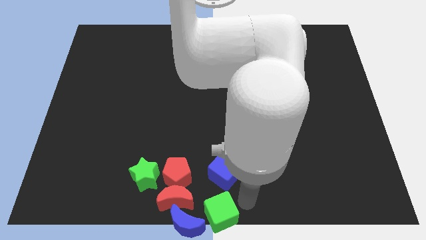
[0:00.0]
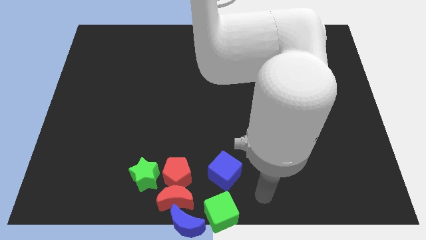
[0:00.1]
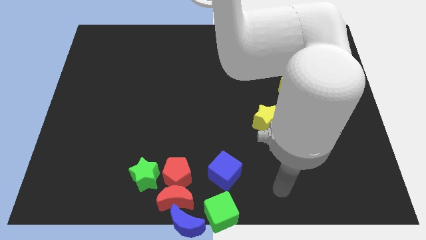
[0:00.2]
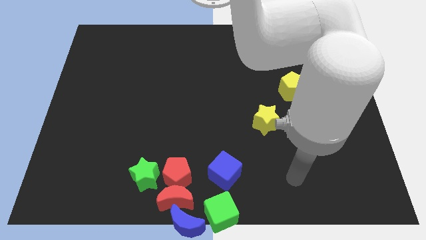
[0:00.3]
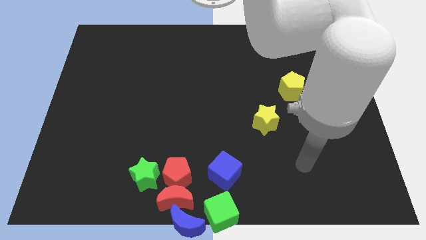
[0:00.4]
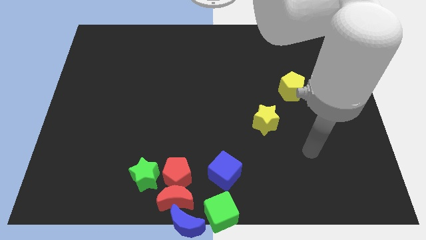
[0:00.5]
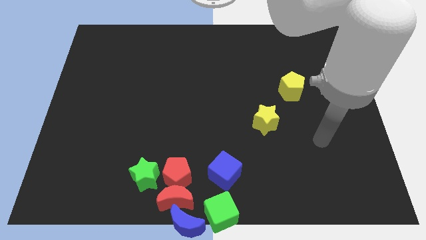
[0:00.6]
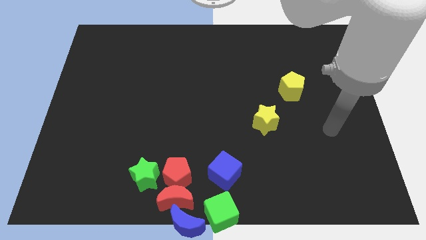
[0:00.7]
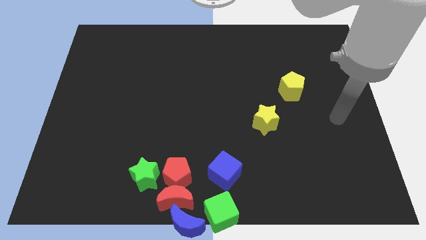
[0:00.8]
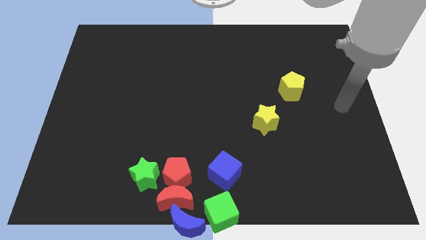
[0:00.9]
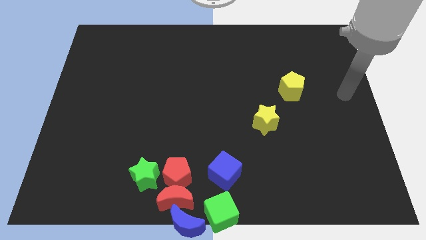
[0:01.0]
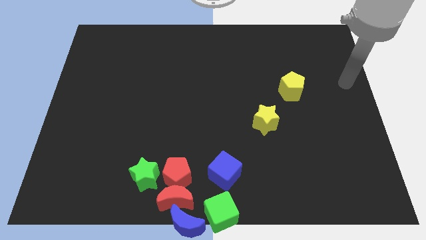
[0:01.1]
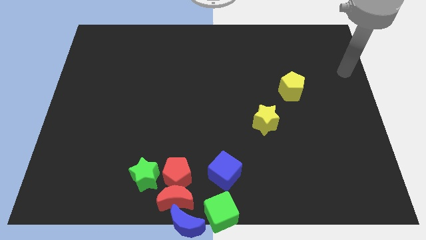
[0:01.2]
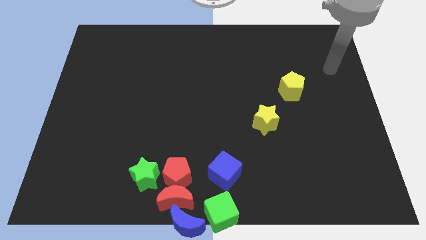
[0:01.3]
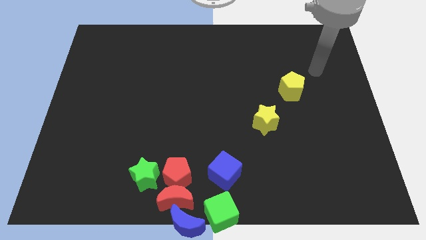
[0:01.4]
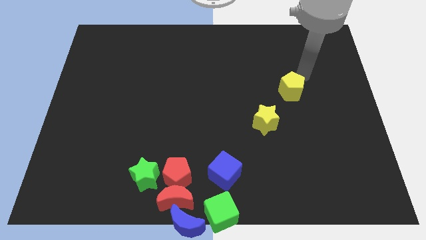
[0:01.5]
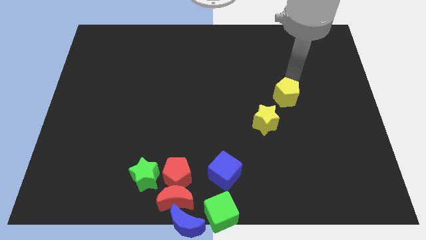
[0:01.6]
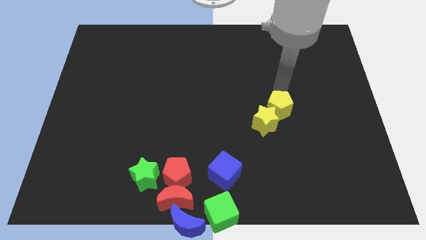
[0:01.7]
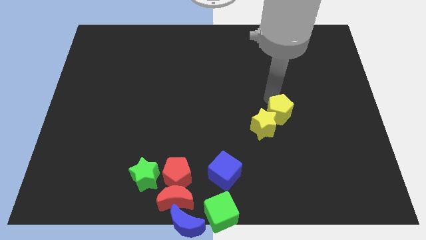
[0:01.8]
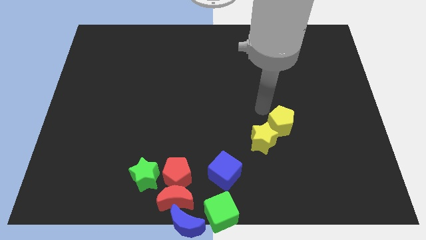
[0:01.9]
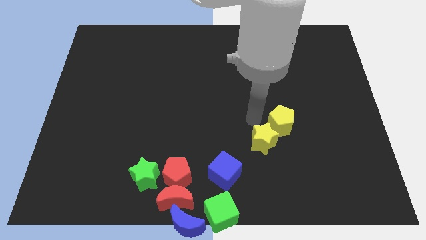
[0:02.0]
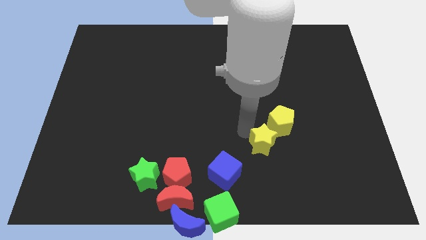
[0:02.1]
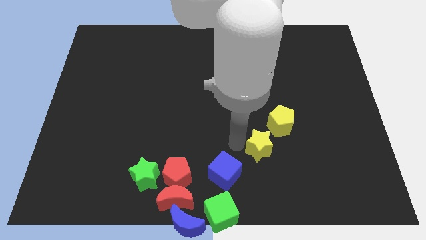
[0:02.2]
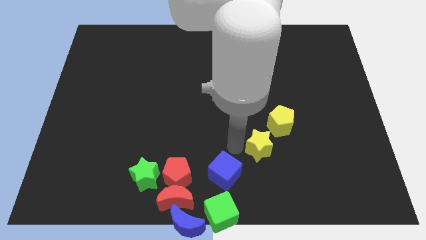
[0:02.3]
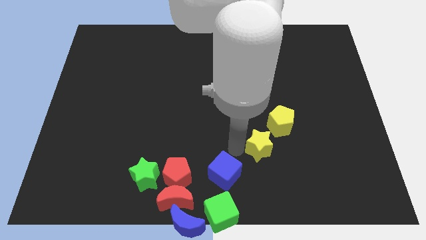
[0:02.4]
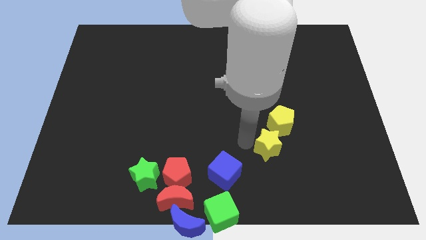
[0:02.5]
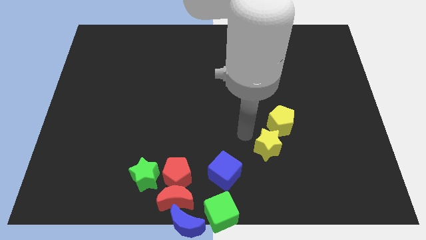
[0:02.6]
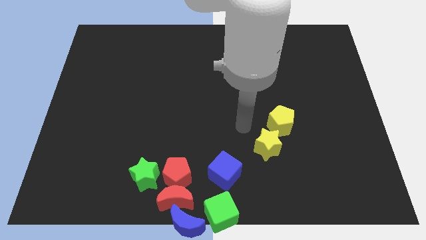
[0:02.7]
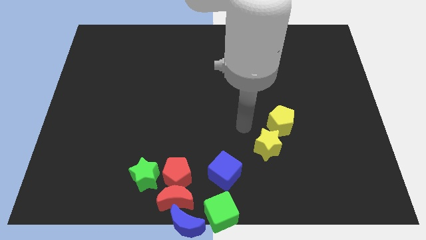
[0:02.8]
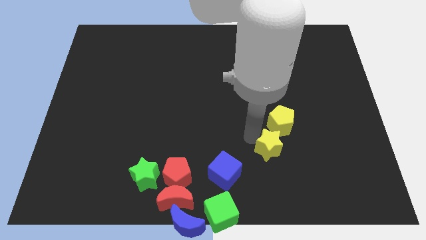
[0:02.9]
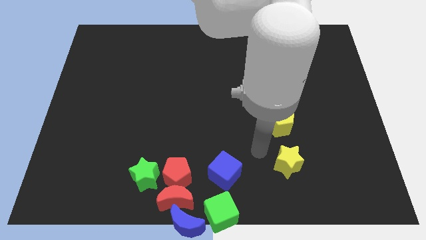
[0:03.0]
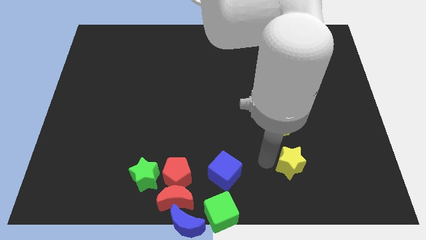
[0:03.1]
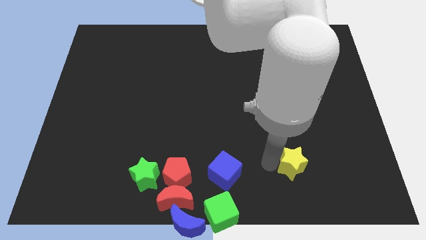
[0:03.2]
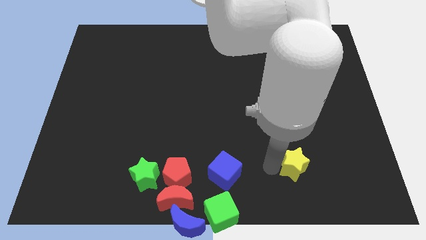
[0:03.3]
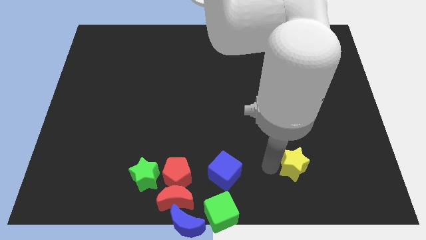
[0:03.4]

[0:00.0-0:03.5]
place the yellow star near the right to the blue cube

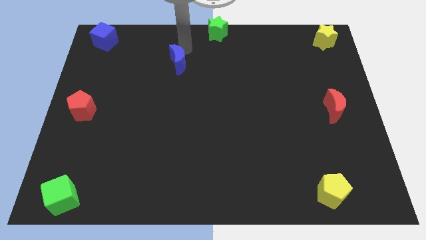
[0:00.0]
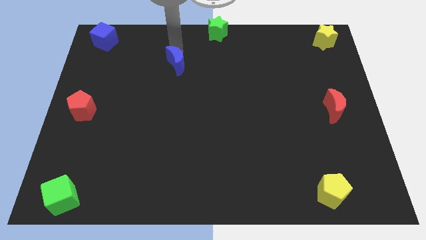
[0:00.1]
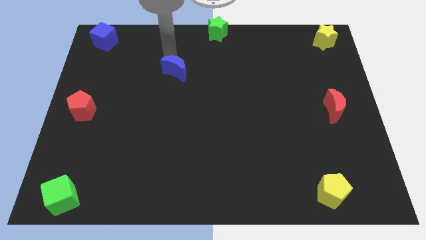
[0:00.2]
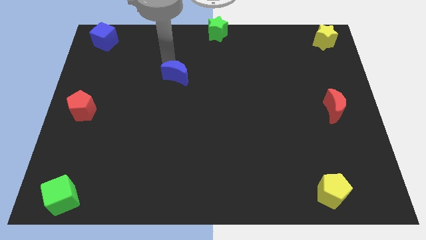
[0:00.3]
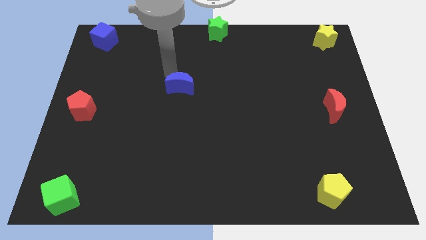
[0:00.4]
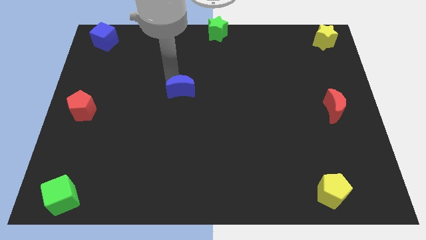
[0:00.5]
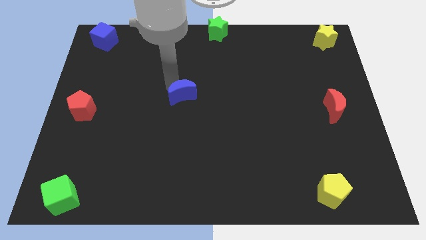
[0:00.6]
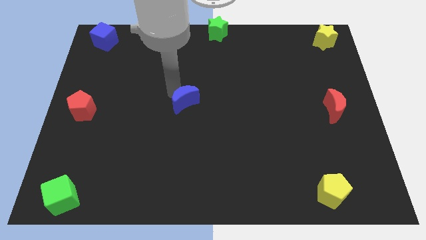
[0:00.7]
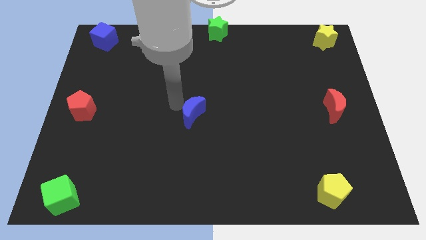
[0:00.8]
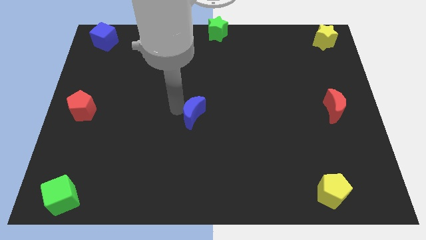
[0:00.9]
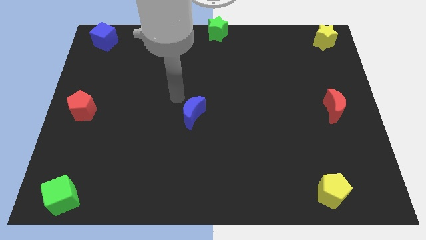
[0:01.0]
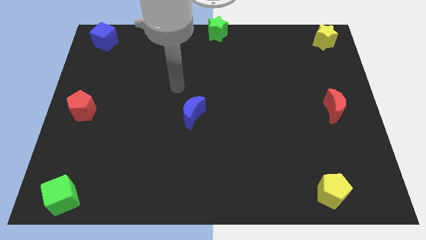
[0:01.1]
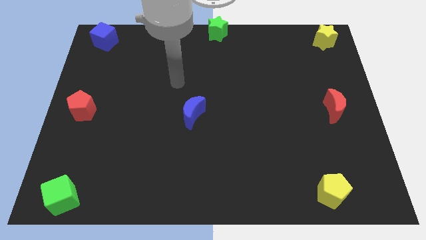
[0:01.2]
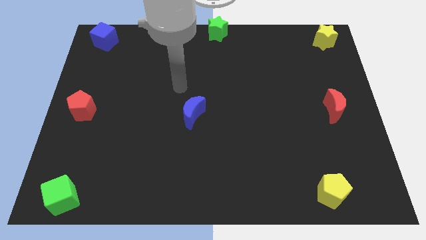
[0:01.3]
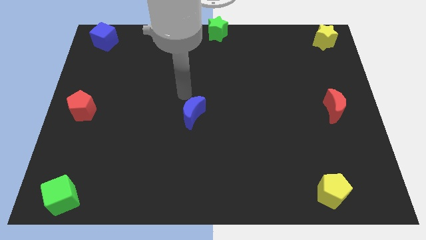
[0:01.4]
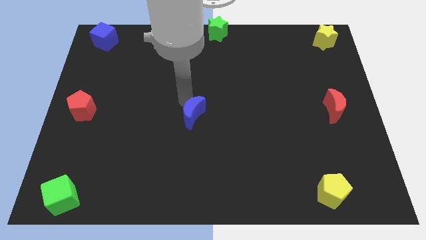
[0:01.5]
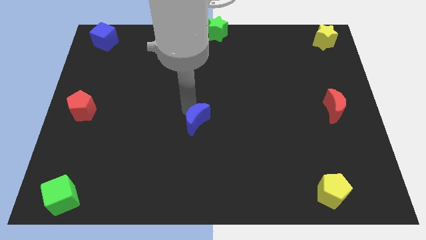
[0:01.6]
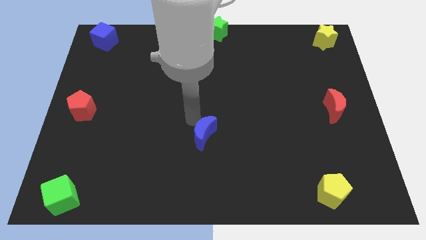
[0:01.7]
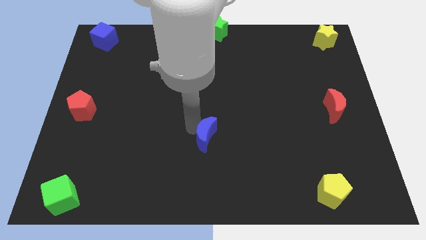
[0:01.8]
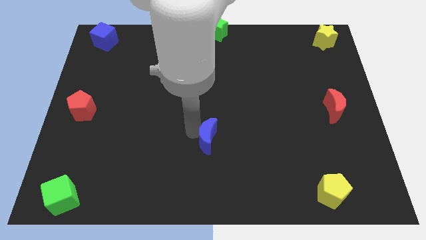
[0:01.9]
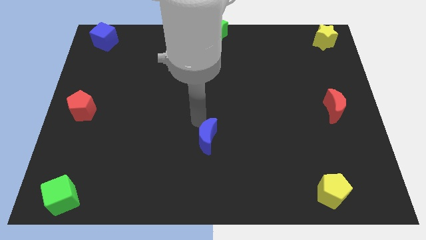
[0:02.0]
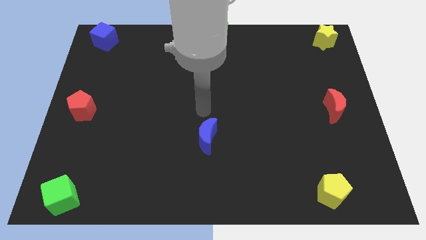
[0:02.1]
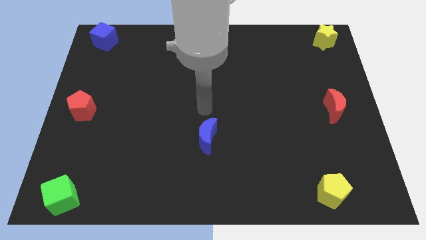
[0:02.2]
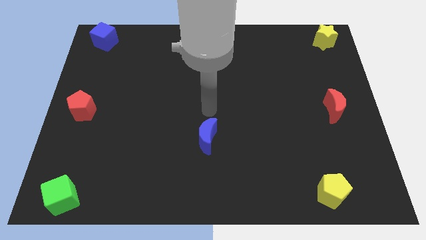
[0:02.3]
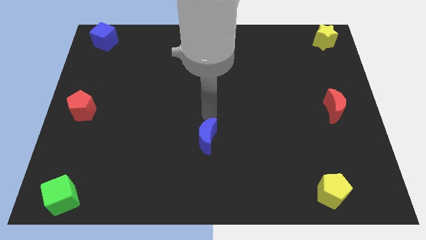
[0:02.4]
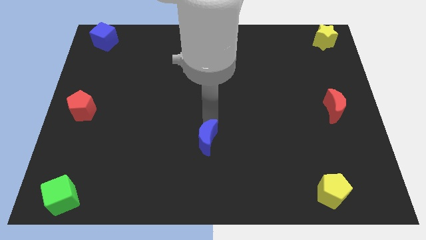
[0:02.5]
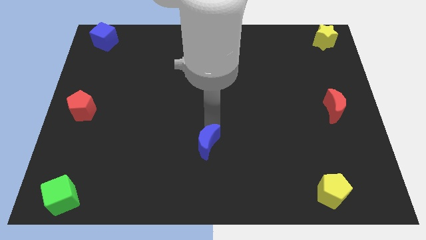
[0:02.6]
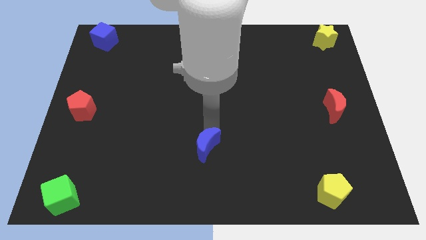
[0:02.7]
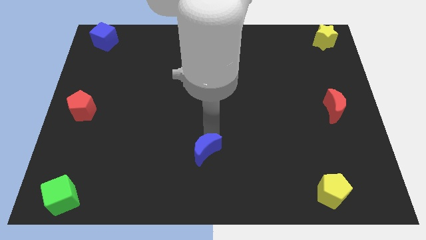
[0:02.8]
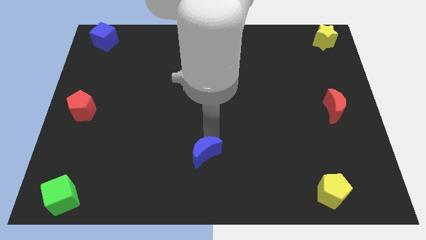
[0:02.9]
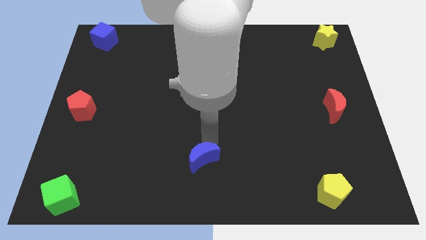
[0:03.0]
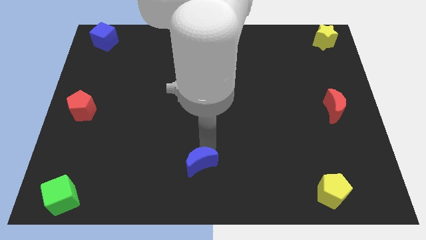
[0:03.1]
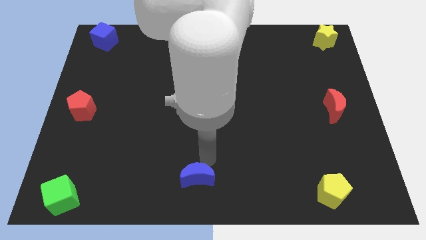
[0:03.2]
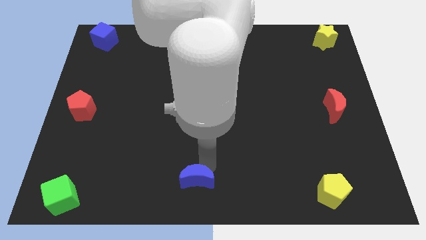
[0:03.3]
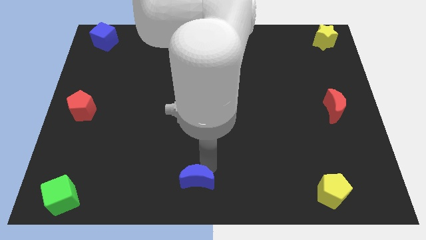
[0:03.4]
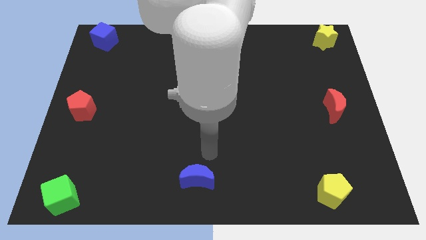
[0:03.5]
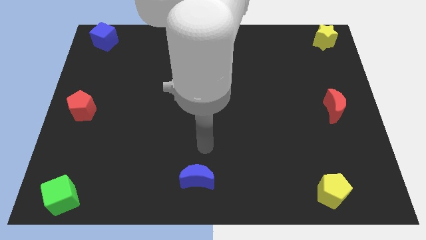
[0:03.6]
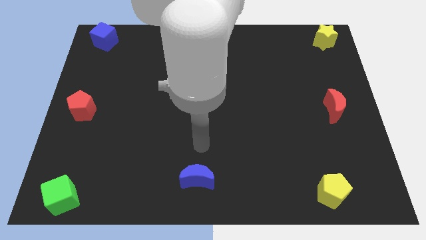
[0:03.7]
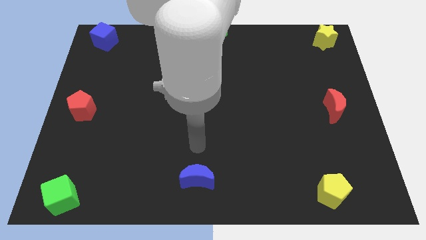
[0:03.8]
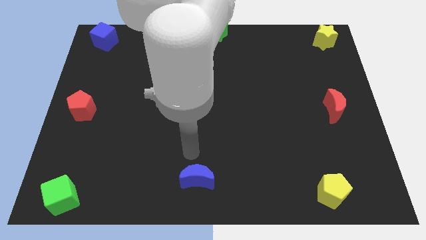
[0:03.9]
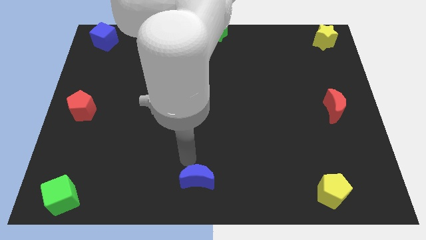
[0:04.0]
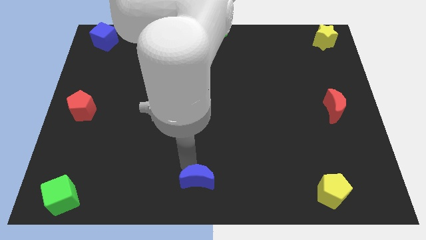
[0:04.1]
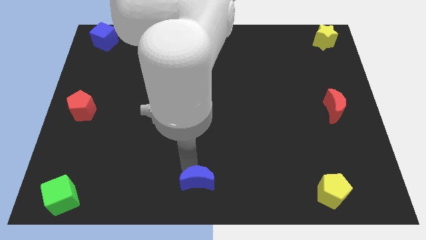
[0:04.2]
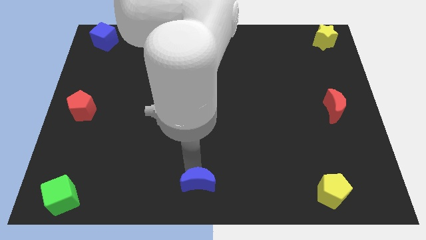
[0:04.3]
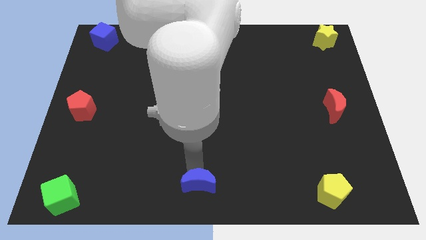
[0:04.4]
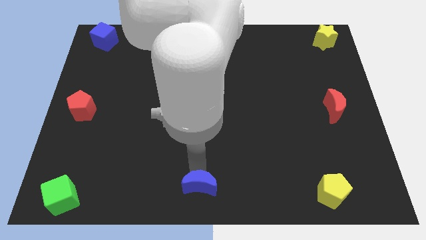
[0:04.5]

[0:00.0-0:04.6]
place blue crescent to bottom middle end

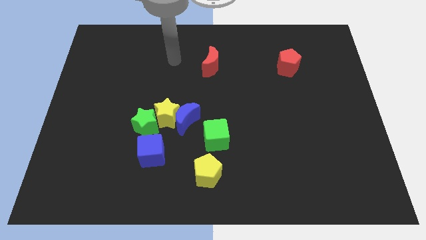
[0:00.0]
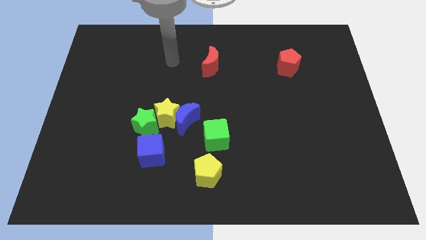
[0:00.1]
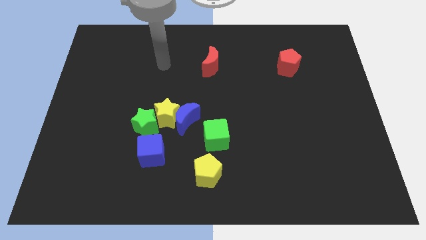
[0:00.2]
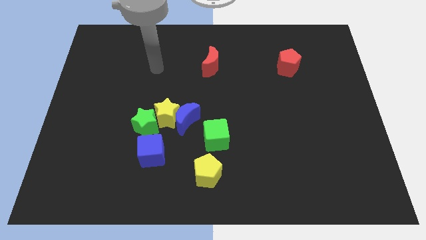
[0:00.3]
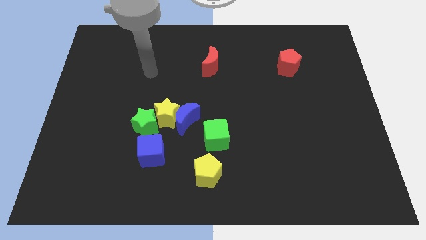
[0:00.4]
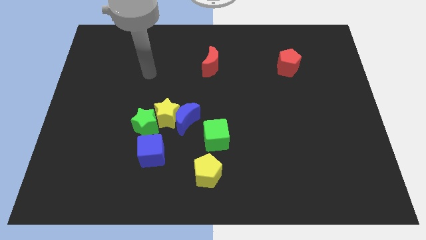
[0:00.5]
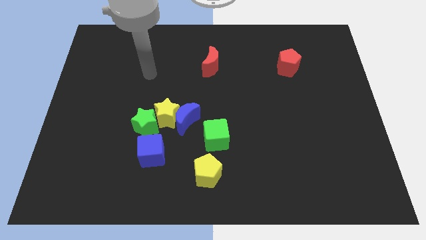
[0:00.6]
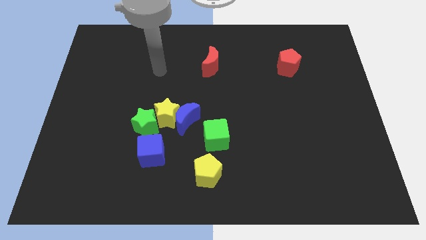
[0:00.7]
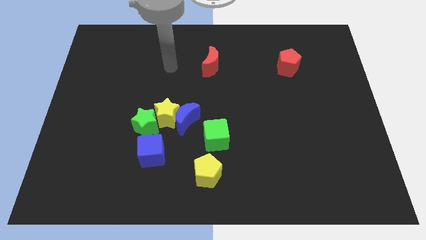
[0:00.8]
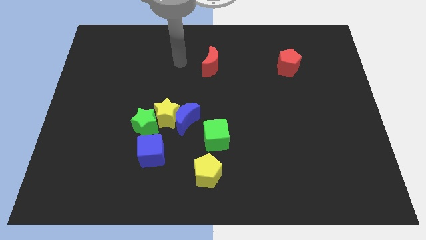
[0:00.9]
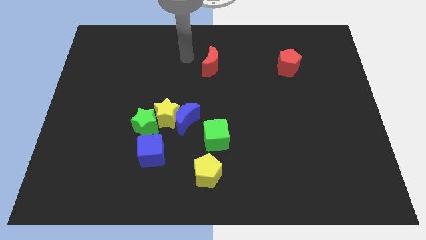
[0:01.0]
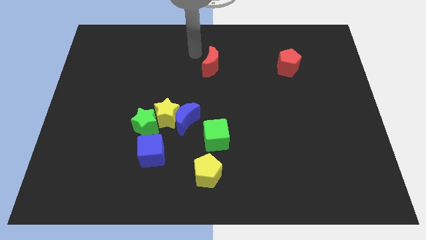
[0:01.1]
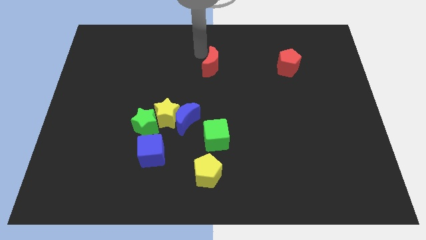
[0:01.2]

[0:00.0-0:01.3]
place the arm to the left of the red moon
